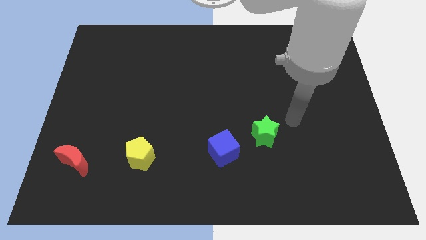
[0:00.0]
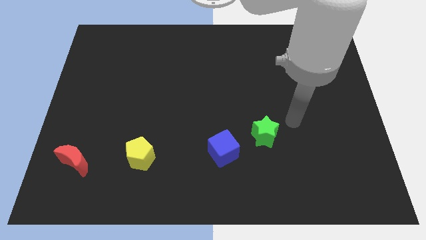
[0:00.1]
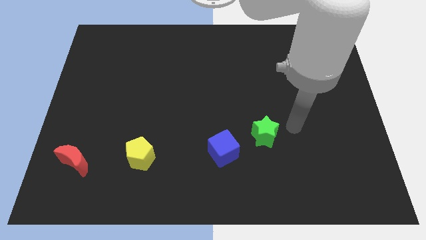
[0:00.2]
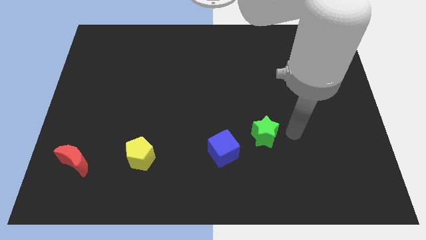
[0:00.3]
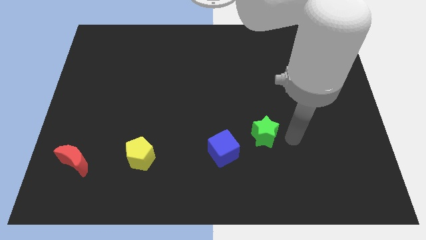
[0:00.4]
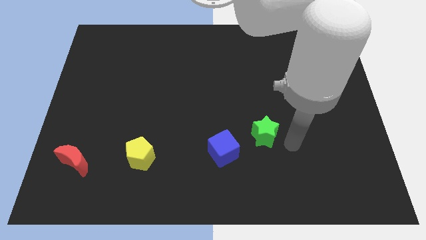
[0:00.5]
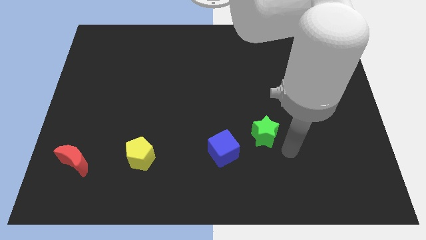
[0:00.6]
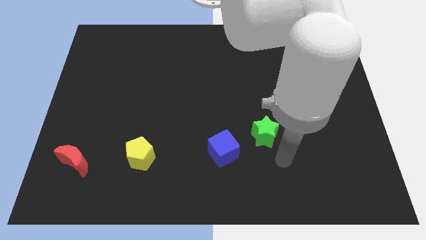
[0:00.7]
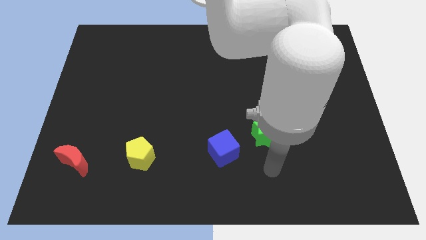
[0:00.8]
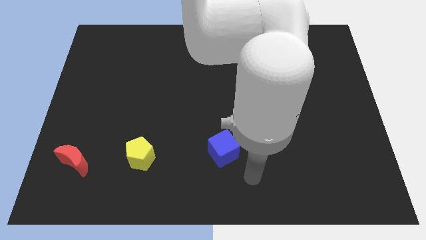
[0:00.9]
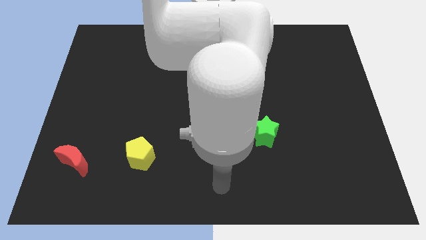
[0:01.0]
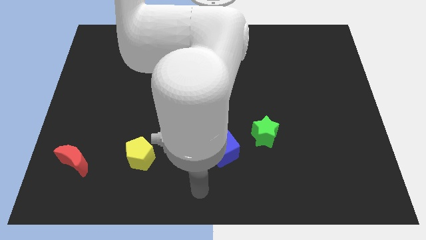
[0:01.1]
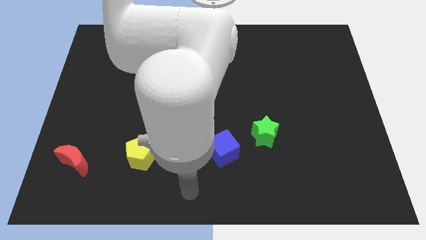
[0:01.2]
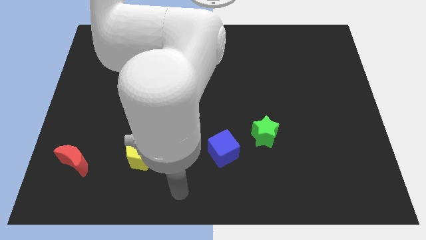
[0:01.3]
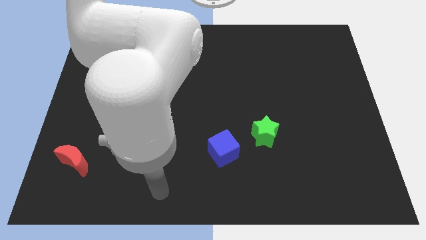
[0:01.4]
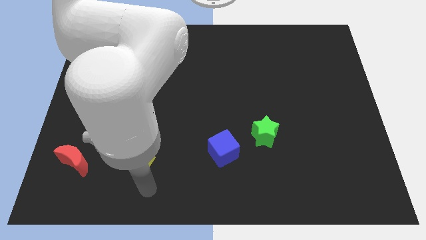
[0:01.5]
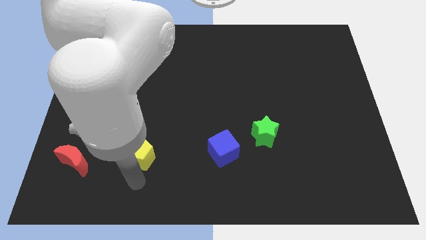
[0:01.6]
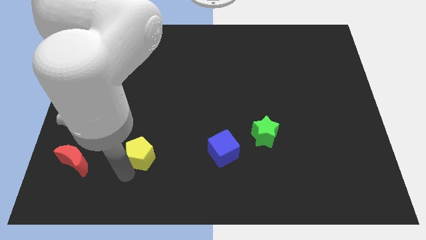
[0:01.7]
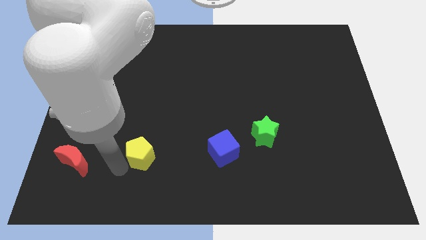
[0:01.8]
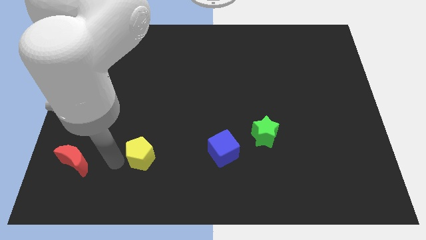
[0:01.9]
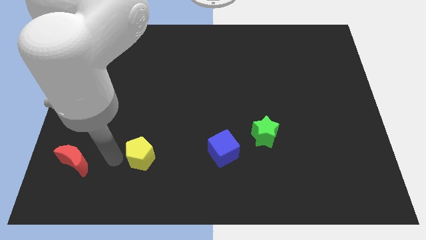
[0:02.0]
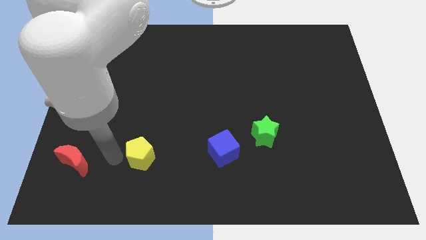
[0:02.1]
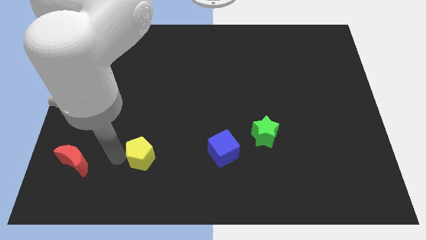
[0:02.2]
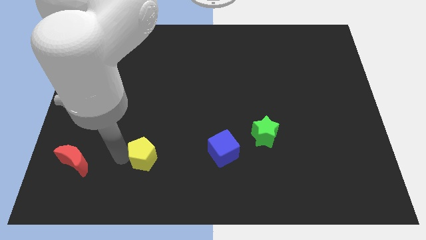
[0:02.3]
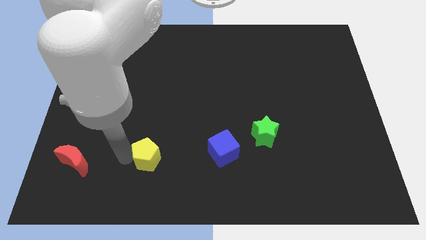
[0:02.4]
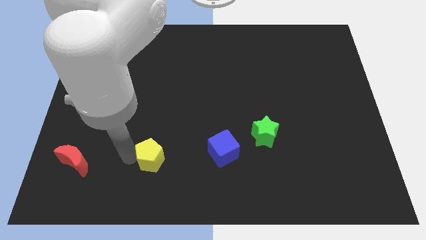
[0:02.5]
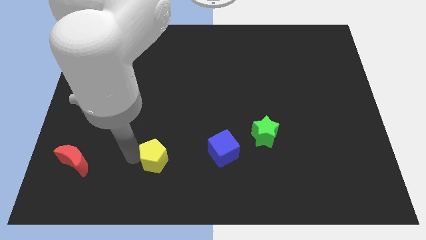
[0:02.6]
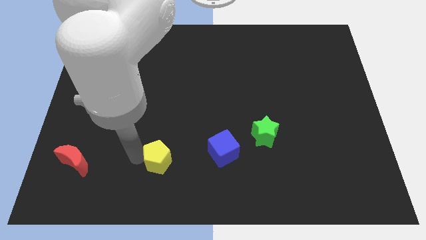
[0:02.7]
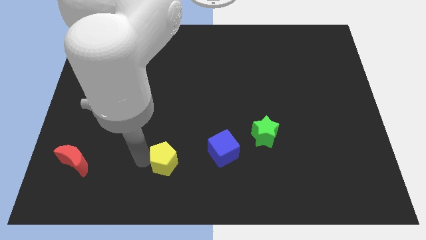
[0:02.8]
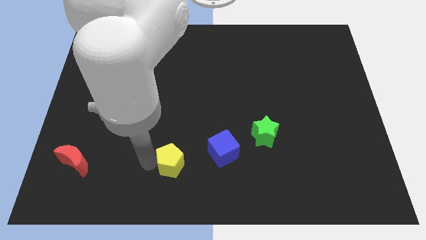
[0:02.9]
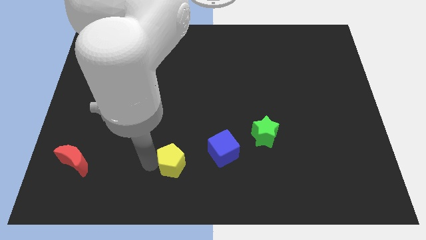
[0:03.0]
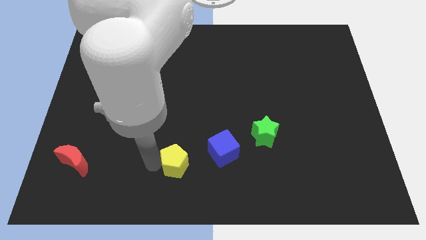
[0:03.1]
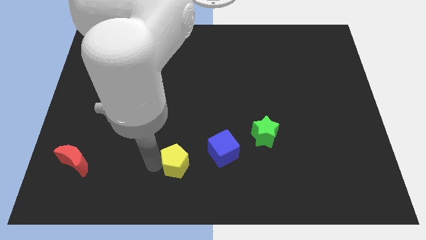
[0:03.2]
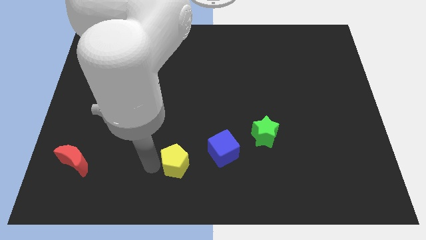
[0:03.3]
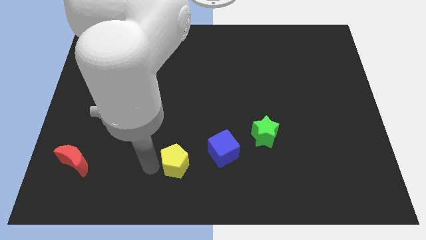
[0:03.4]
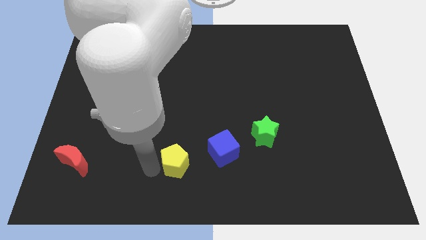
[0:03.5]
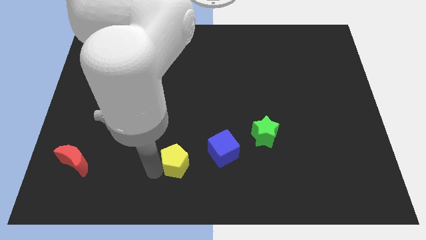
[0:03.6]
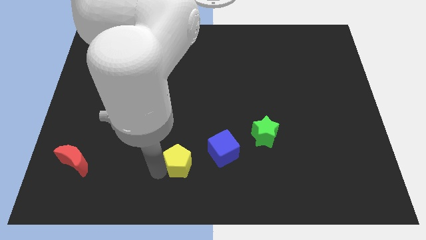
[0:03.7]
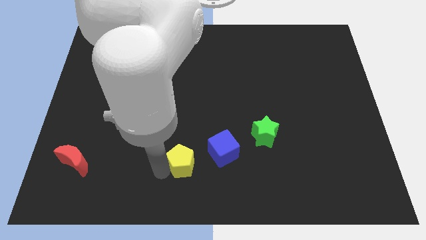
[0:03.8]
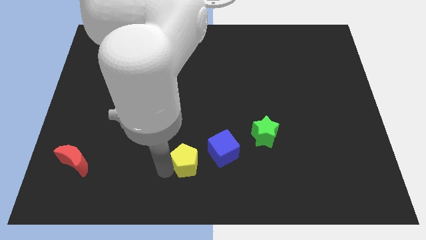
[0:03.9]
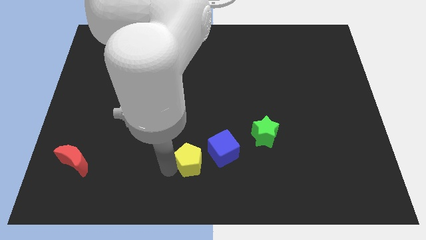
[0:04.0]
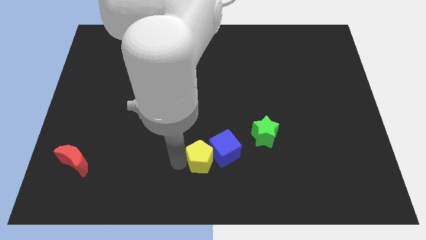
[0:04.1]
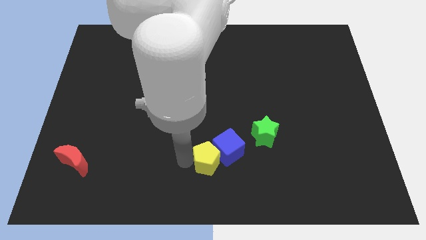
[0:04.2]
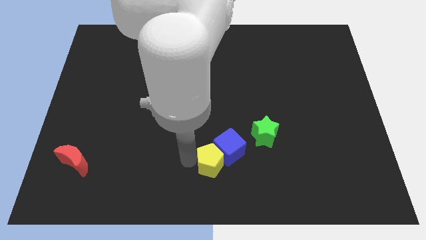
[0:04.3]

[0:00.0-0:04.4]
put the yellow pentagon towards the blue block

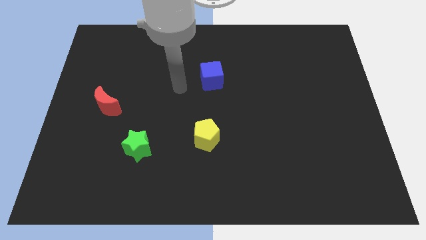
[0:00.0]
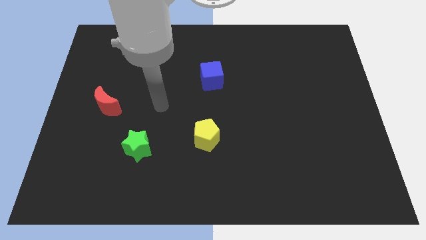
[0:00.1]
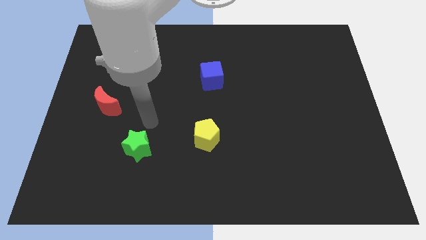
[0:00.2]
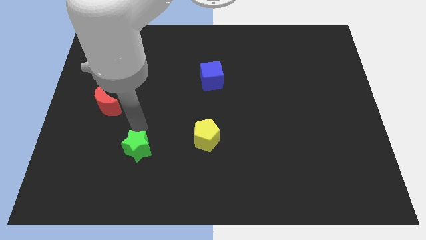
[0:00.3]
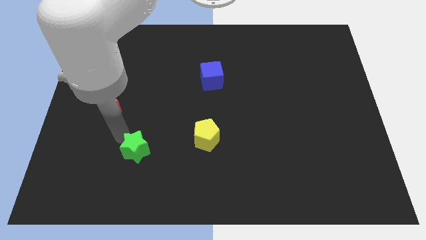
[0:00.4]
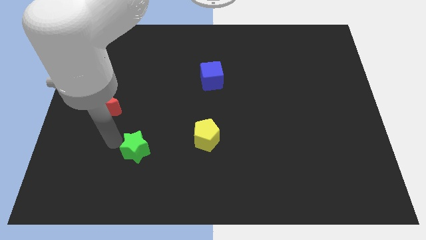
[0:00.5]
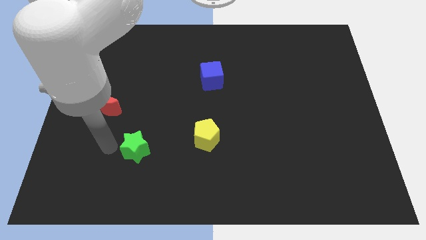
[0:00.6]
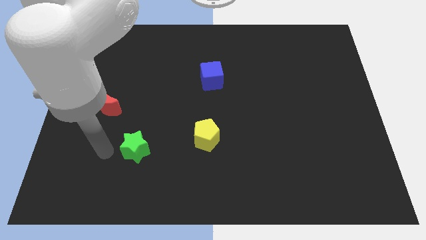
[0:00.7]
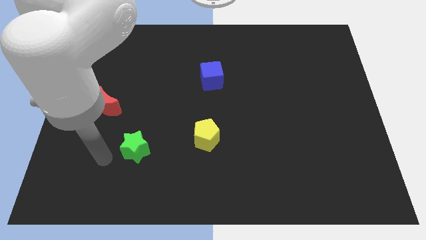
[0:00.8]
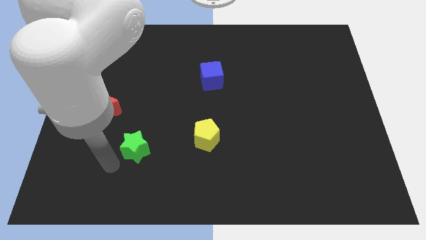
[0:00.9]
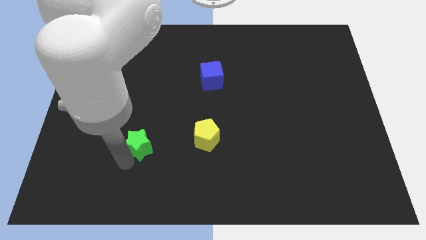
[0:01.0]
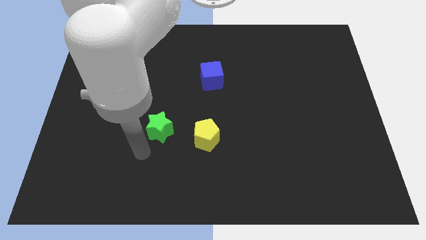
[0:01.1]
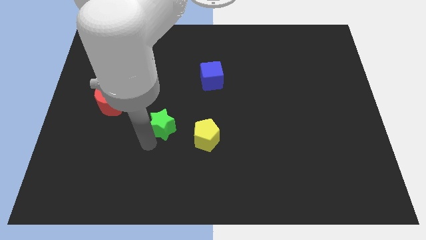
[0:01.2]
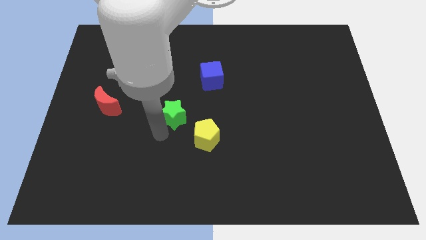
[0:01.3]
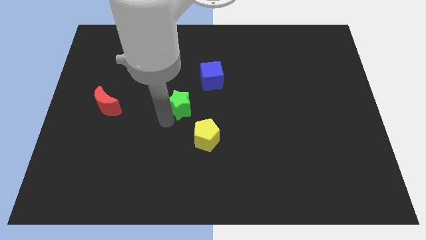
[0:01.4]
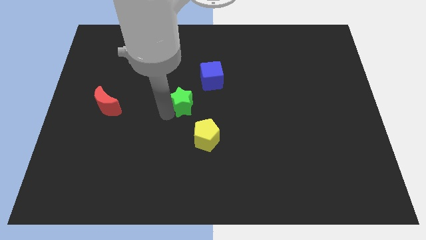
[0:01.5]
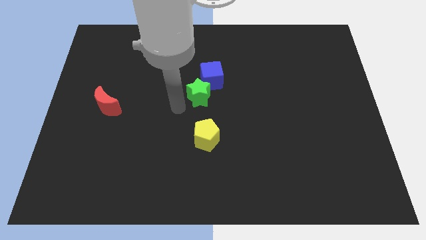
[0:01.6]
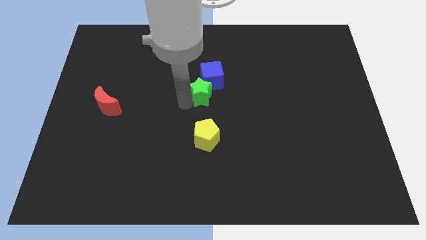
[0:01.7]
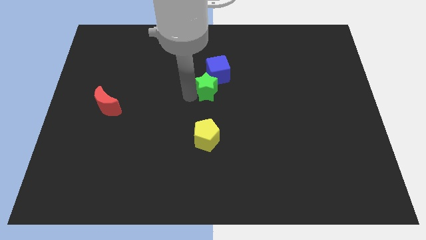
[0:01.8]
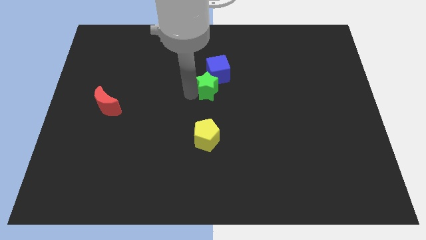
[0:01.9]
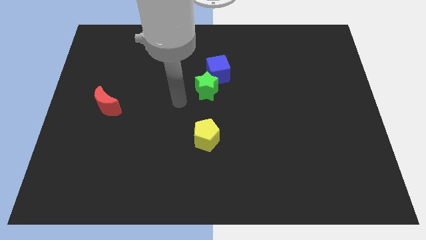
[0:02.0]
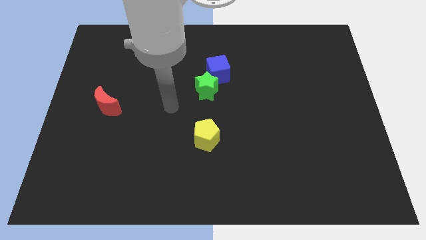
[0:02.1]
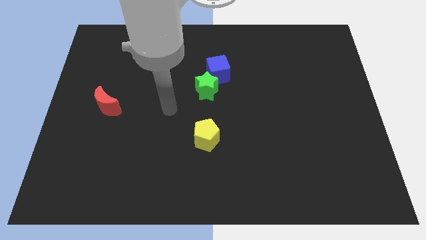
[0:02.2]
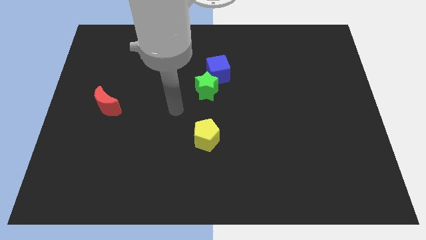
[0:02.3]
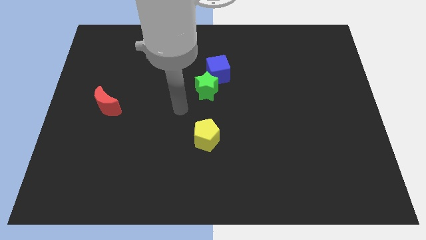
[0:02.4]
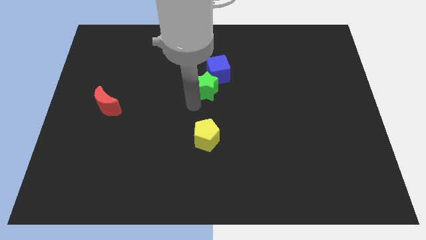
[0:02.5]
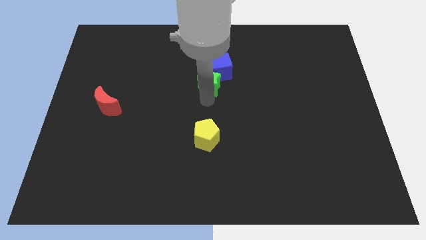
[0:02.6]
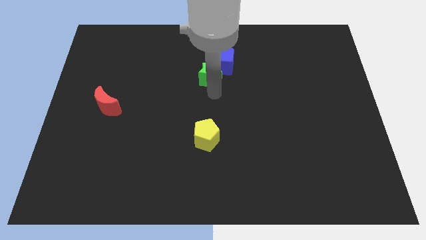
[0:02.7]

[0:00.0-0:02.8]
slide the green star towards the blue block

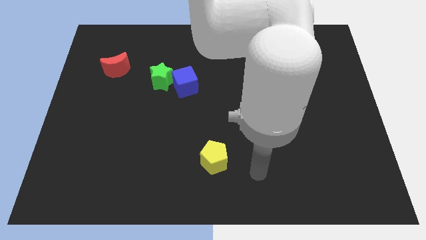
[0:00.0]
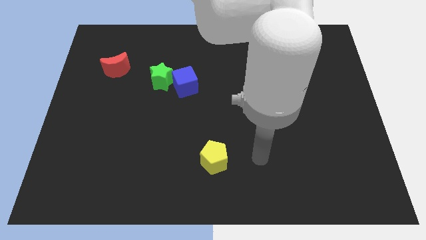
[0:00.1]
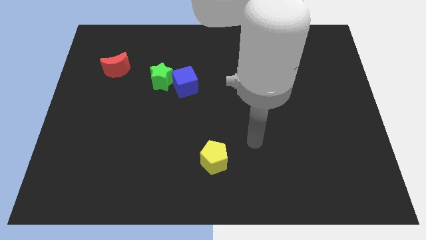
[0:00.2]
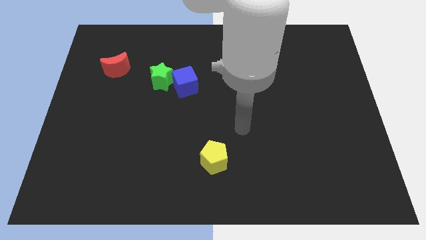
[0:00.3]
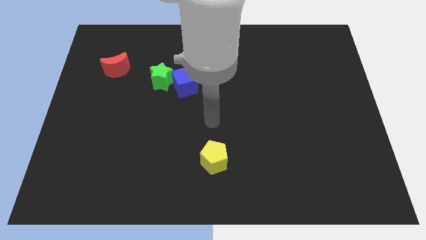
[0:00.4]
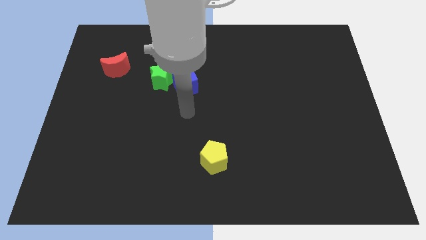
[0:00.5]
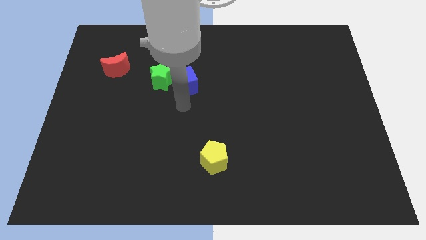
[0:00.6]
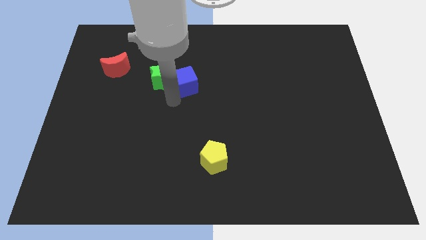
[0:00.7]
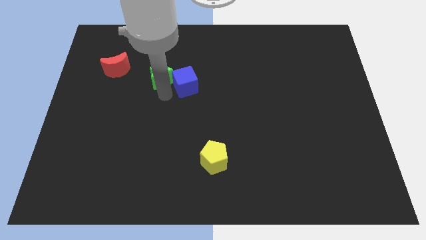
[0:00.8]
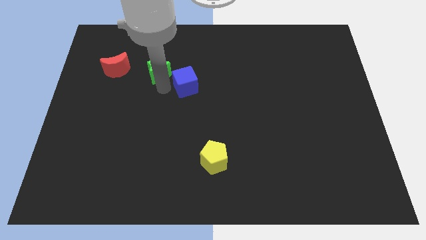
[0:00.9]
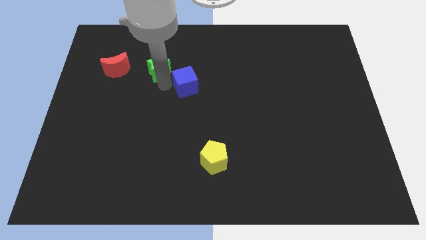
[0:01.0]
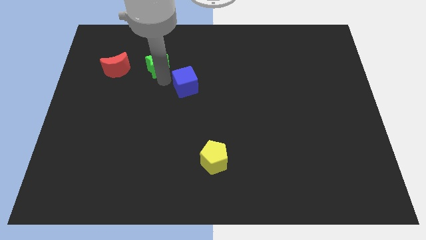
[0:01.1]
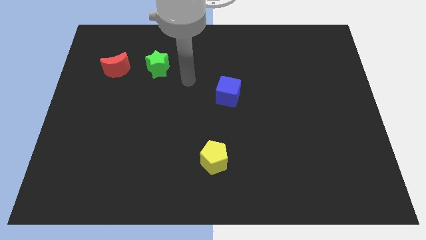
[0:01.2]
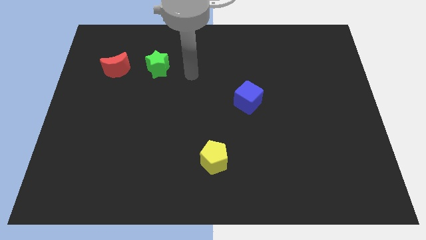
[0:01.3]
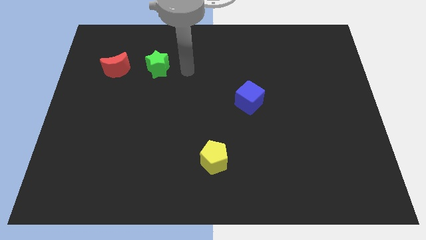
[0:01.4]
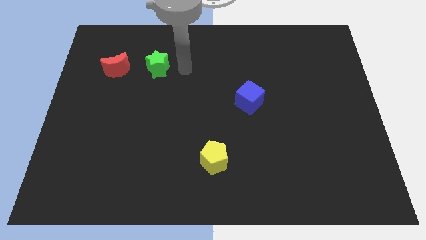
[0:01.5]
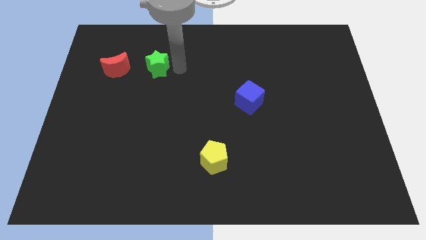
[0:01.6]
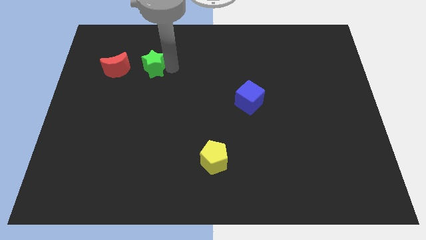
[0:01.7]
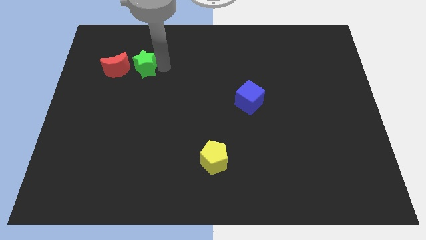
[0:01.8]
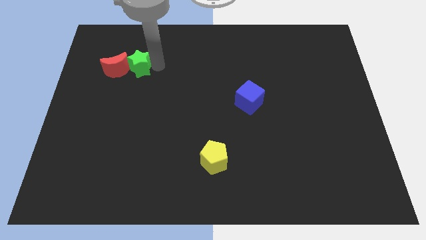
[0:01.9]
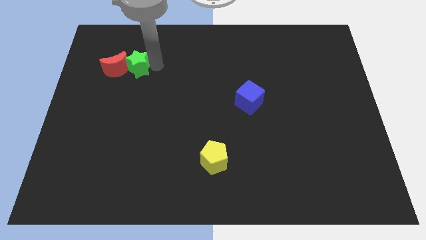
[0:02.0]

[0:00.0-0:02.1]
put the star to the red moon
